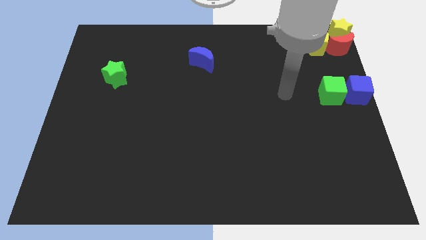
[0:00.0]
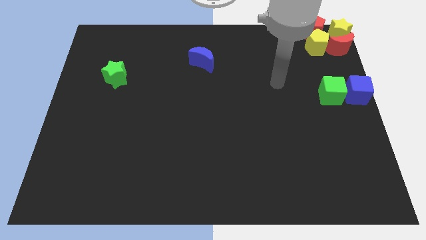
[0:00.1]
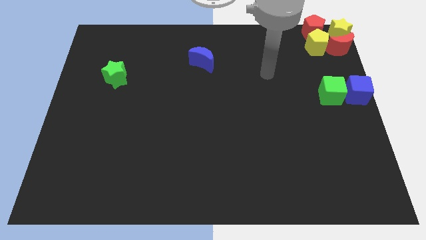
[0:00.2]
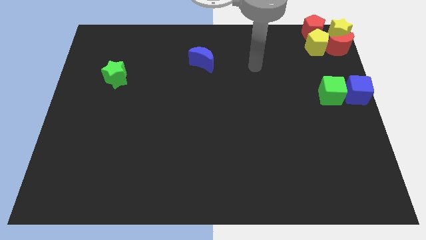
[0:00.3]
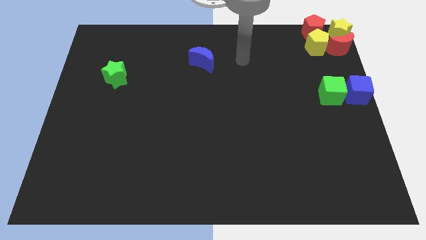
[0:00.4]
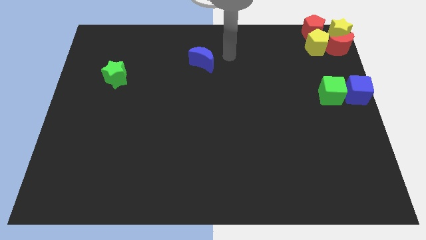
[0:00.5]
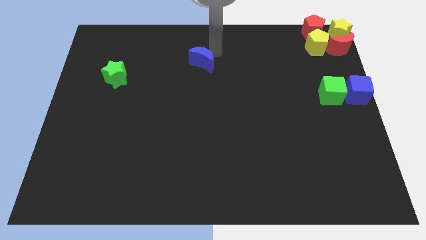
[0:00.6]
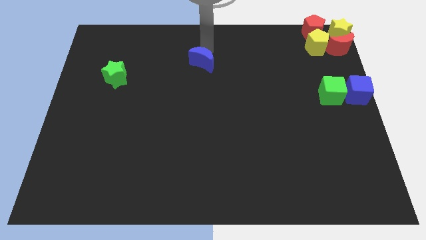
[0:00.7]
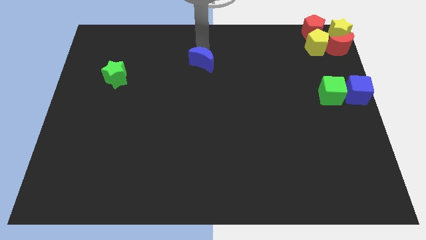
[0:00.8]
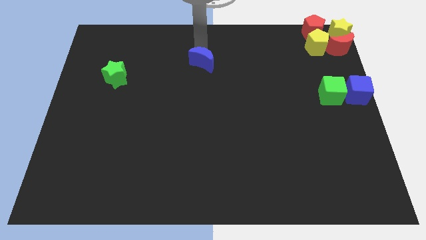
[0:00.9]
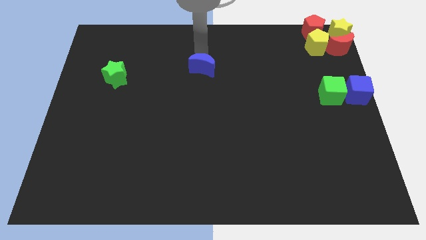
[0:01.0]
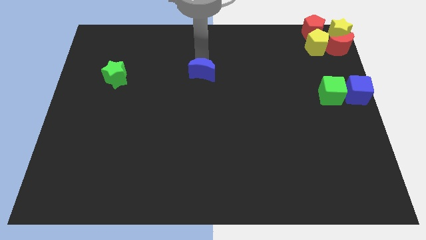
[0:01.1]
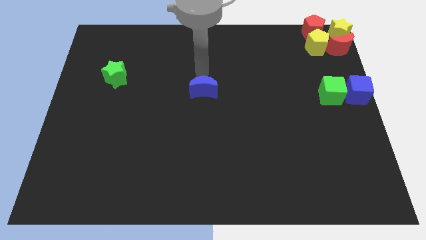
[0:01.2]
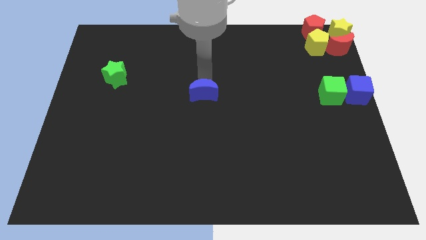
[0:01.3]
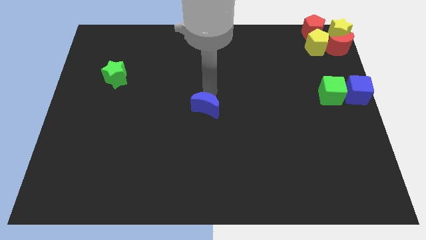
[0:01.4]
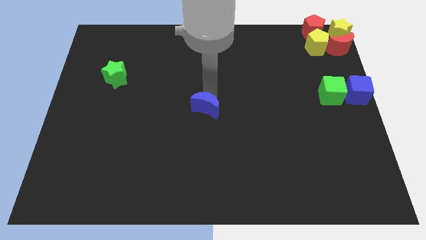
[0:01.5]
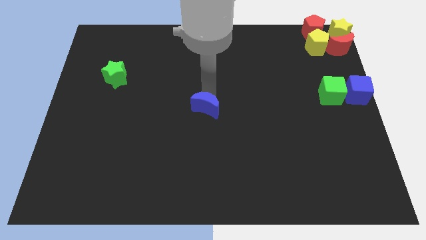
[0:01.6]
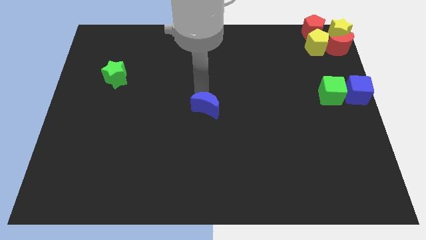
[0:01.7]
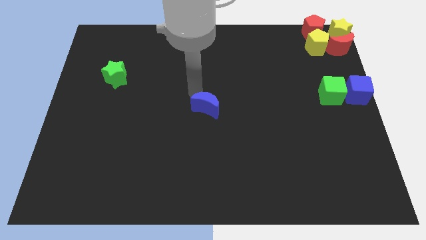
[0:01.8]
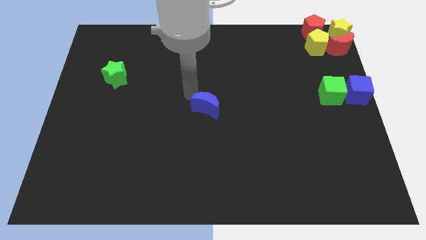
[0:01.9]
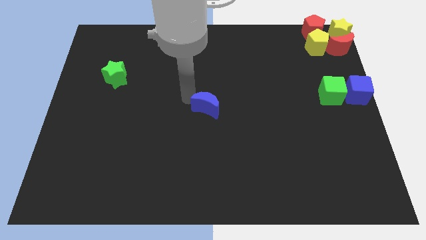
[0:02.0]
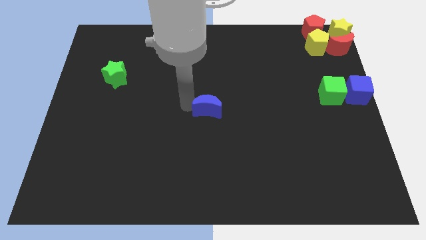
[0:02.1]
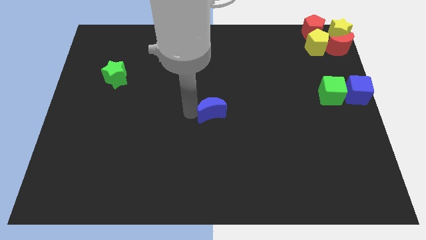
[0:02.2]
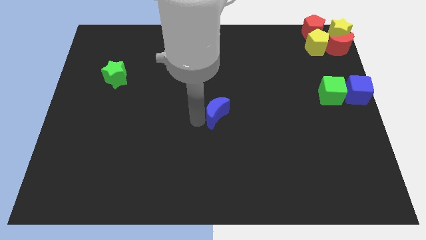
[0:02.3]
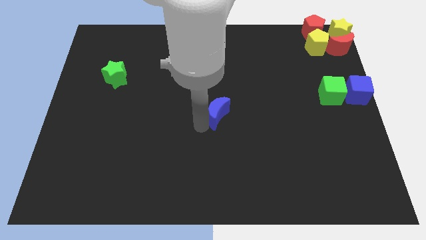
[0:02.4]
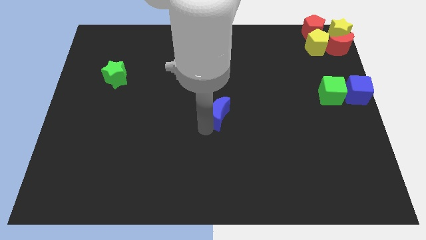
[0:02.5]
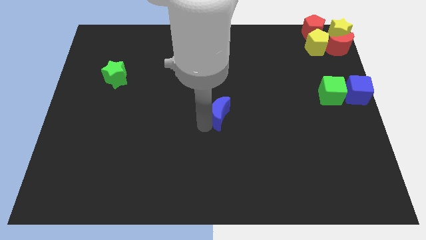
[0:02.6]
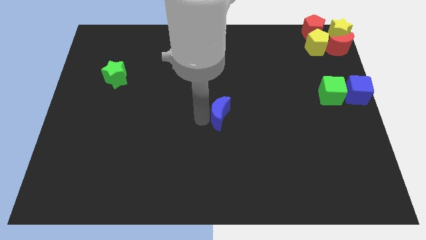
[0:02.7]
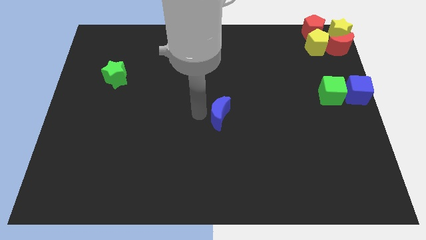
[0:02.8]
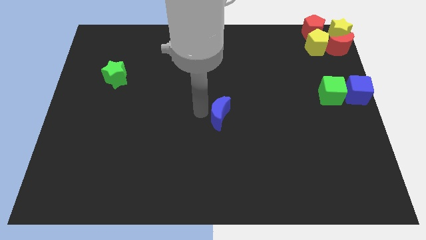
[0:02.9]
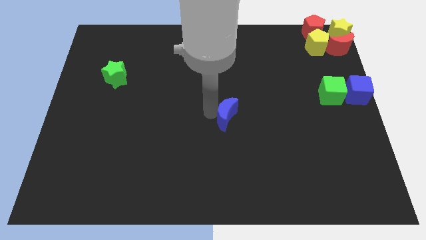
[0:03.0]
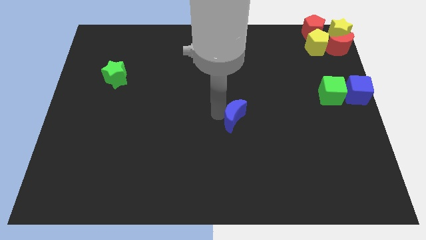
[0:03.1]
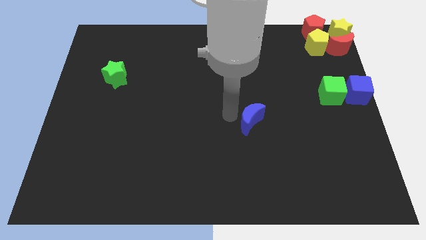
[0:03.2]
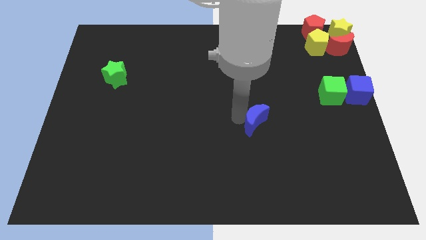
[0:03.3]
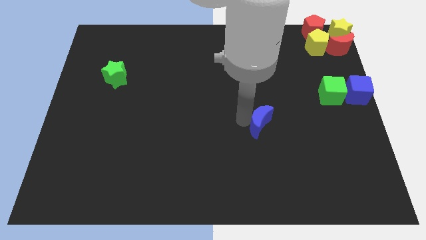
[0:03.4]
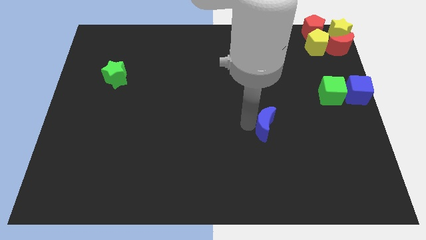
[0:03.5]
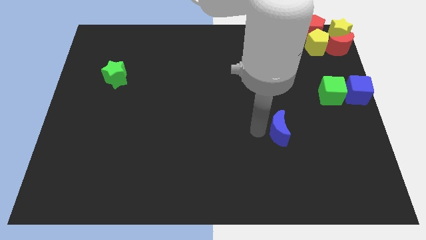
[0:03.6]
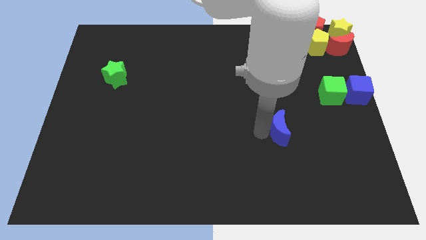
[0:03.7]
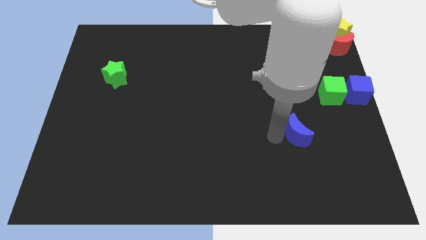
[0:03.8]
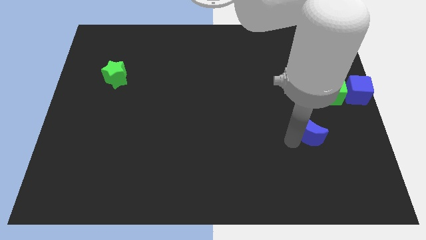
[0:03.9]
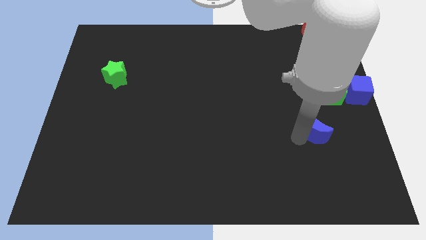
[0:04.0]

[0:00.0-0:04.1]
slide the blue crescent towards the right side of the board

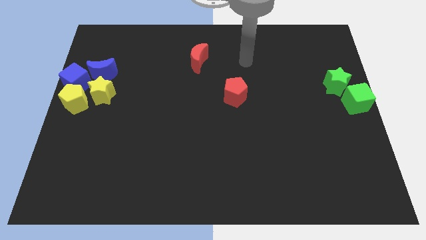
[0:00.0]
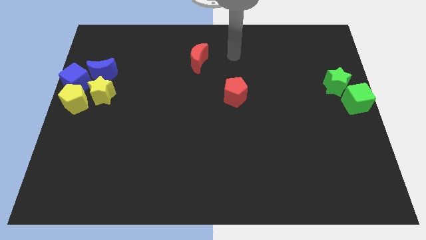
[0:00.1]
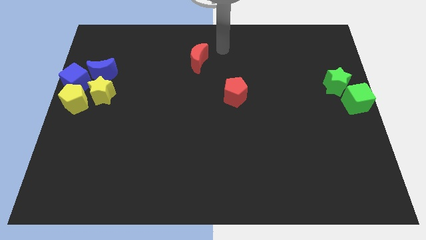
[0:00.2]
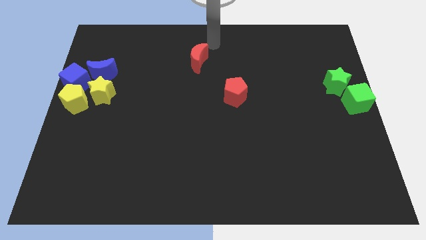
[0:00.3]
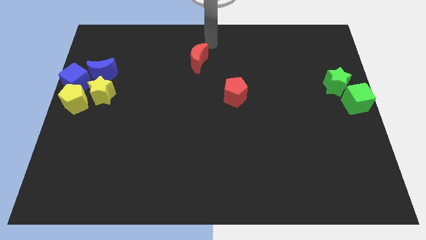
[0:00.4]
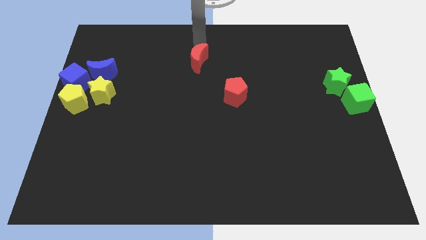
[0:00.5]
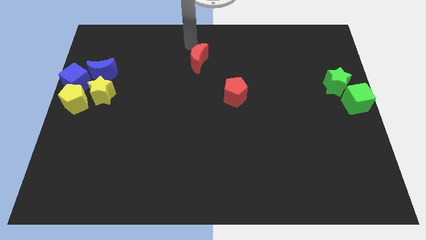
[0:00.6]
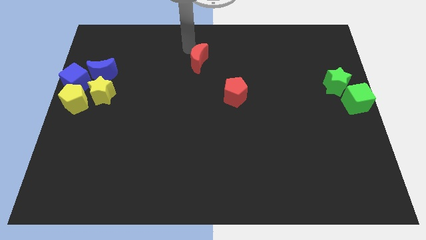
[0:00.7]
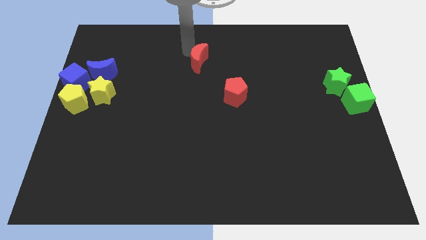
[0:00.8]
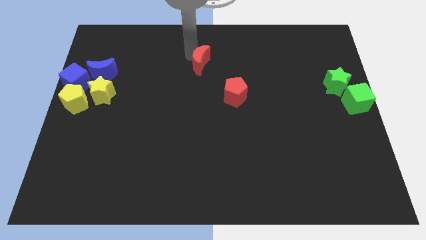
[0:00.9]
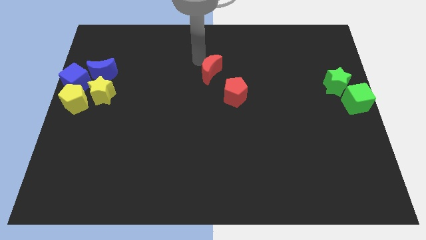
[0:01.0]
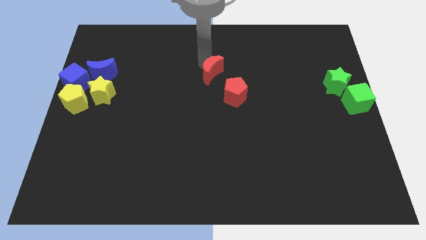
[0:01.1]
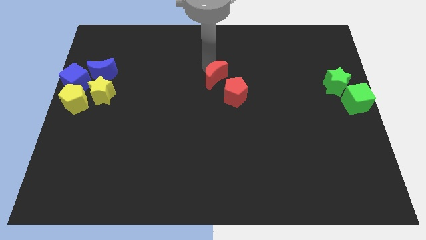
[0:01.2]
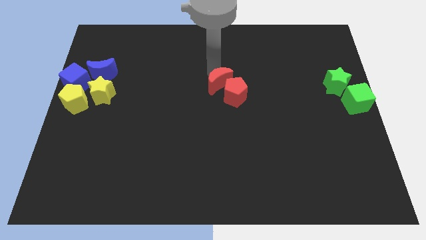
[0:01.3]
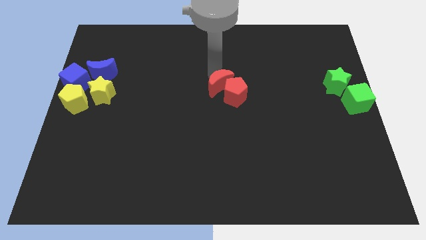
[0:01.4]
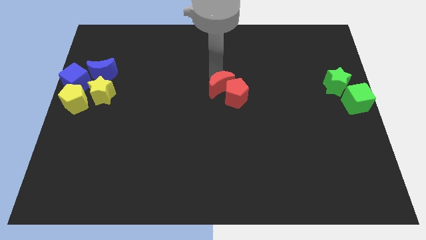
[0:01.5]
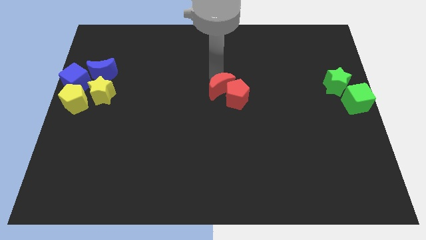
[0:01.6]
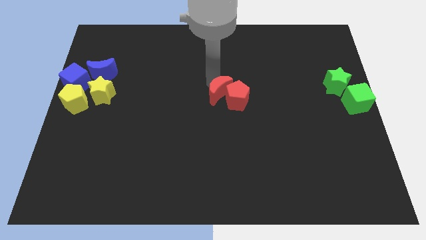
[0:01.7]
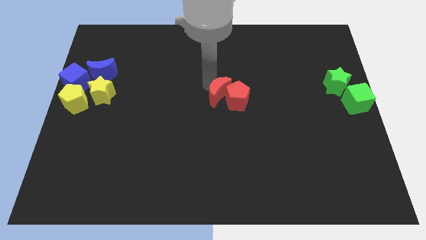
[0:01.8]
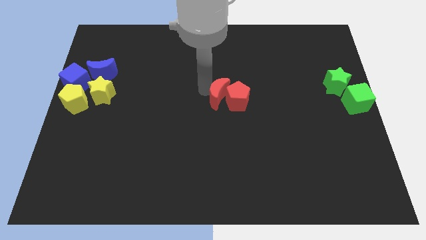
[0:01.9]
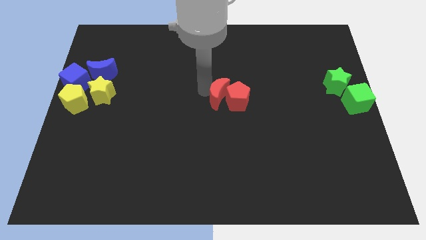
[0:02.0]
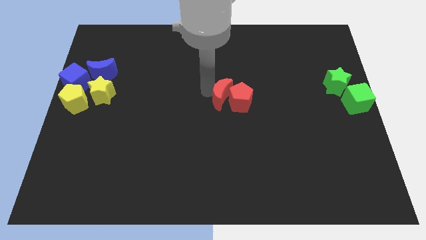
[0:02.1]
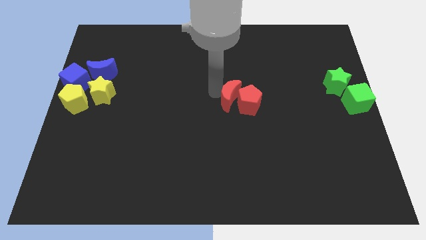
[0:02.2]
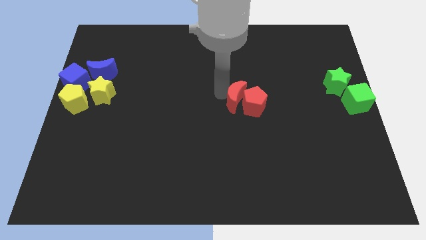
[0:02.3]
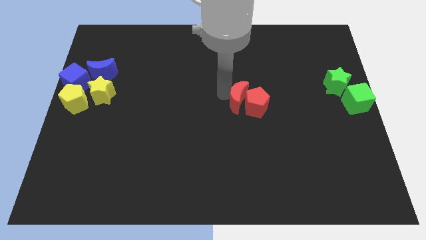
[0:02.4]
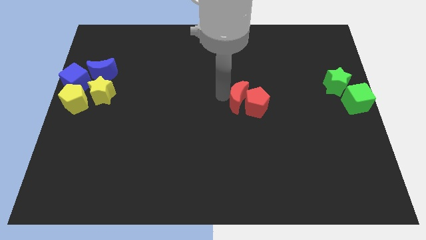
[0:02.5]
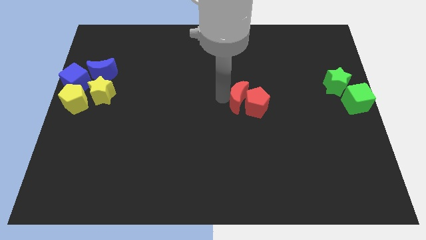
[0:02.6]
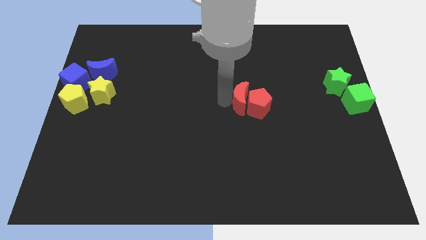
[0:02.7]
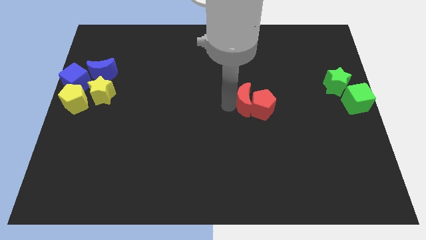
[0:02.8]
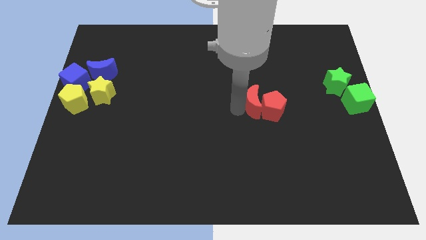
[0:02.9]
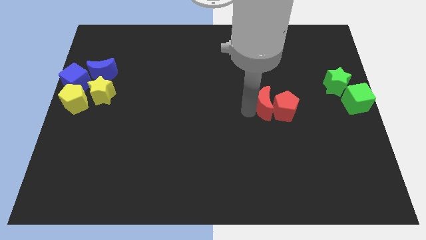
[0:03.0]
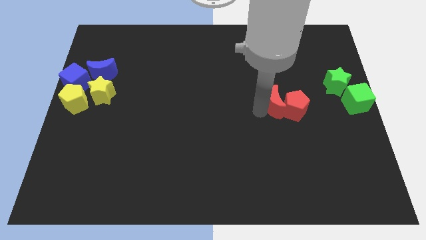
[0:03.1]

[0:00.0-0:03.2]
slide the red moon into the red pentagon

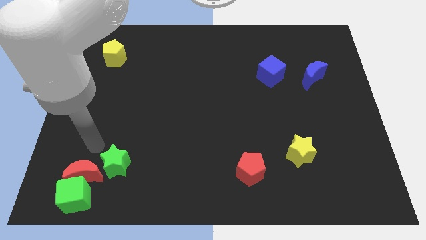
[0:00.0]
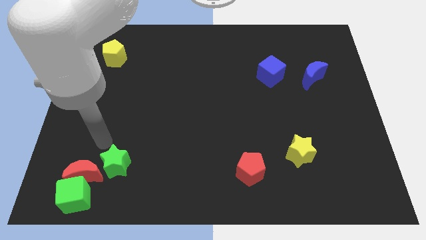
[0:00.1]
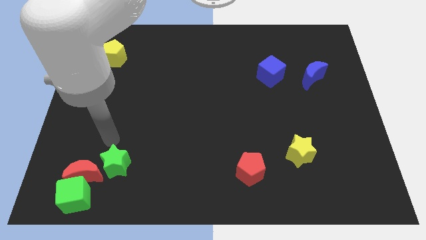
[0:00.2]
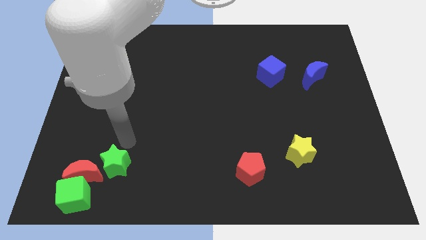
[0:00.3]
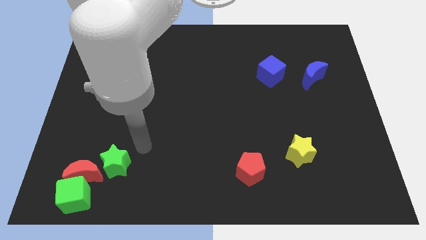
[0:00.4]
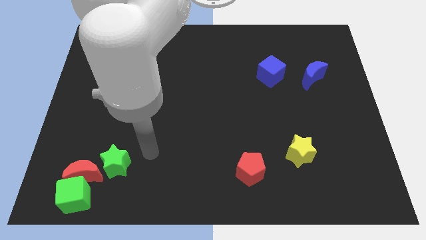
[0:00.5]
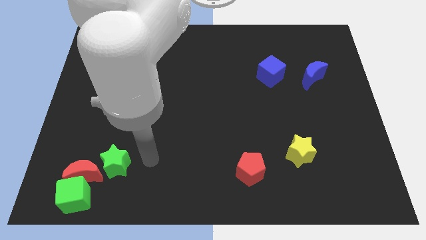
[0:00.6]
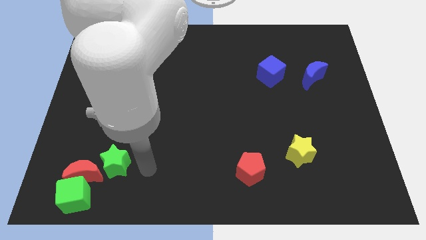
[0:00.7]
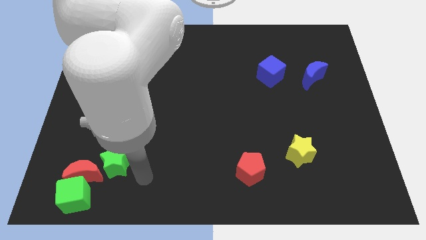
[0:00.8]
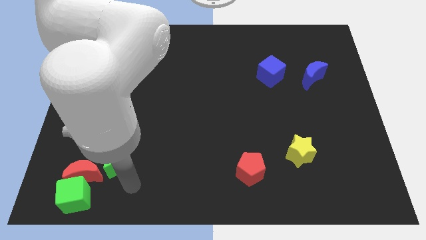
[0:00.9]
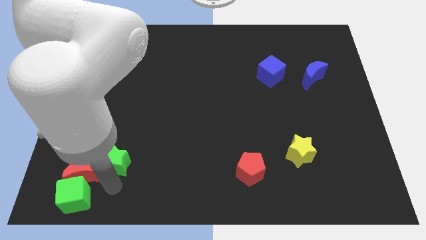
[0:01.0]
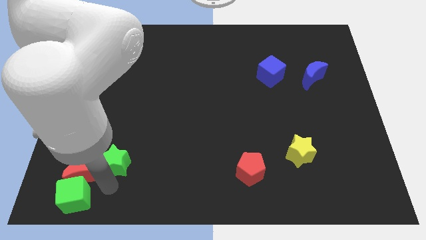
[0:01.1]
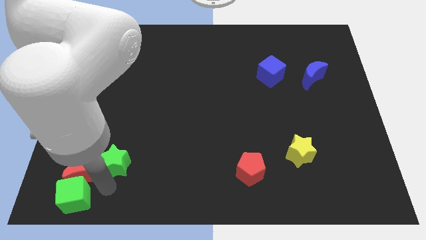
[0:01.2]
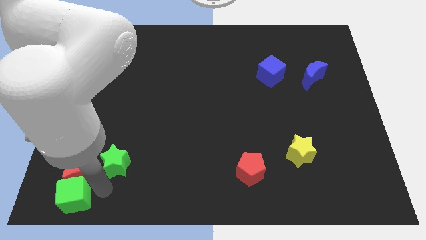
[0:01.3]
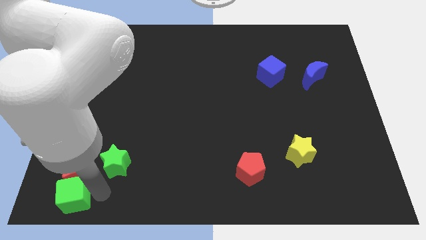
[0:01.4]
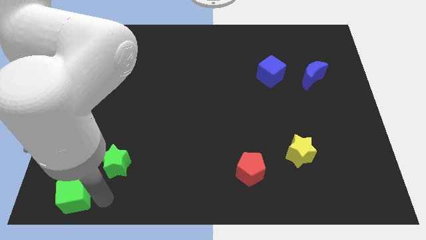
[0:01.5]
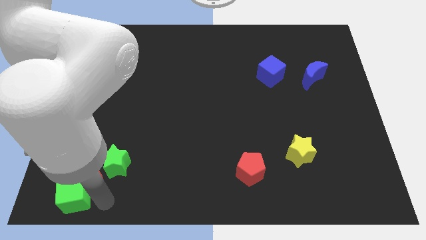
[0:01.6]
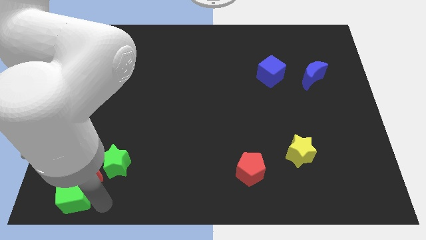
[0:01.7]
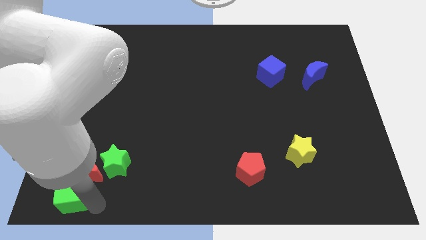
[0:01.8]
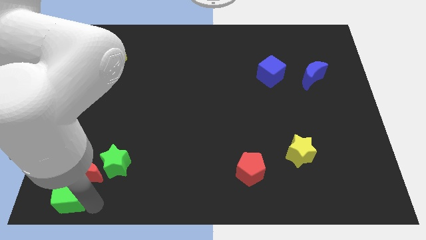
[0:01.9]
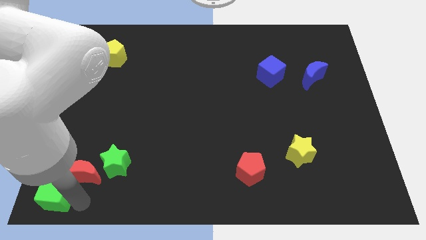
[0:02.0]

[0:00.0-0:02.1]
move the green cube to the bottom left
